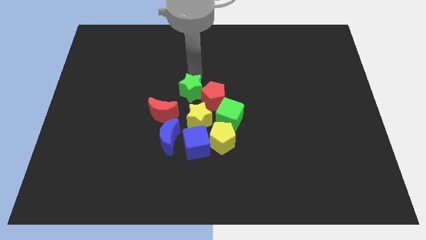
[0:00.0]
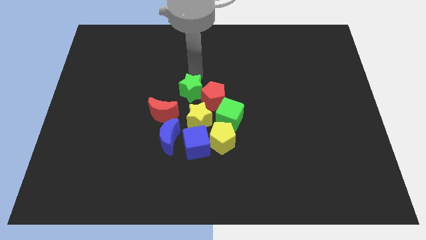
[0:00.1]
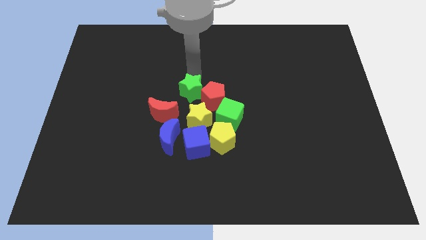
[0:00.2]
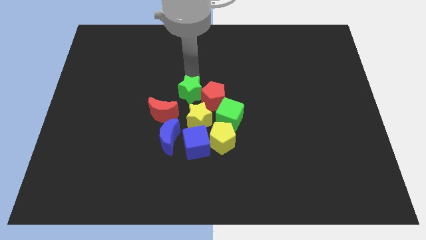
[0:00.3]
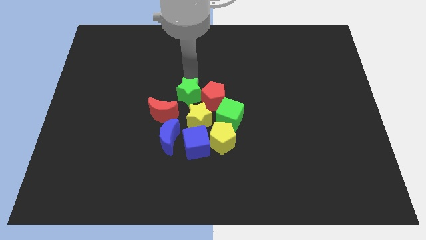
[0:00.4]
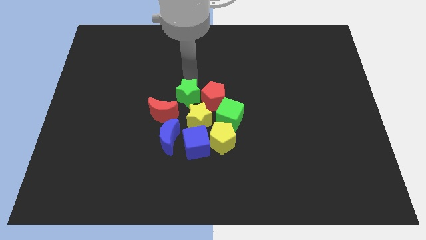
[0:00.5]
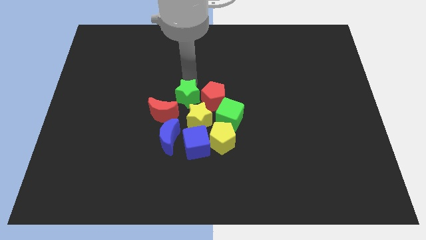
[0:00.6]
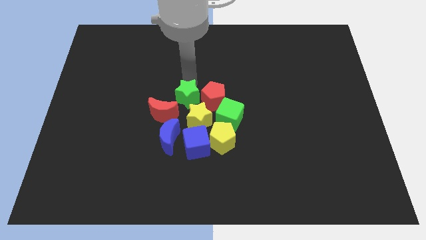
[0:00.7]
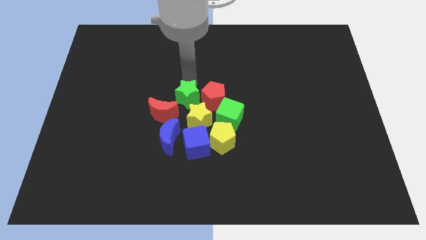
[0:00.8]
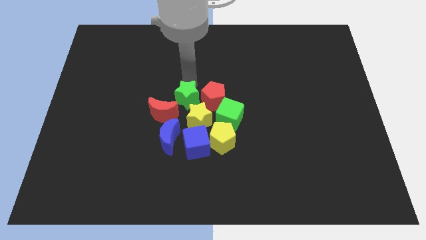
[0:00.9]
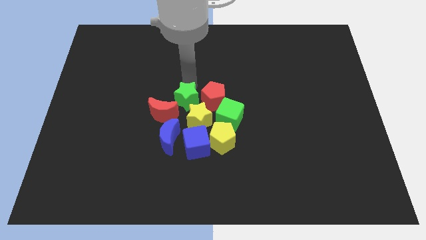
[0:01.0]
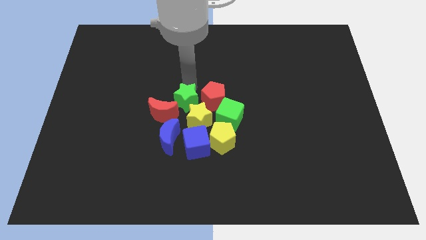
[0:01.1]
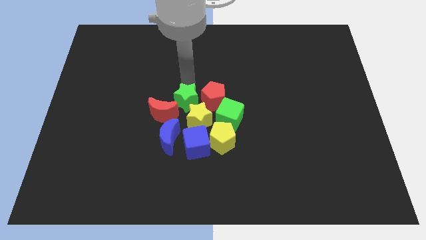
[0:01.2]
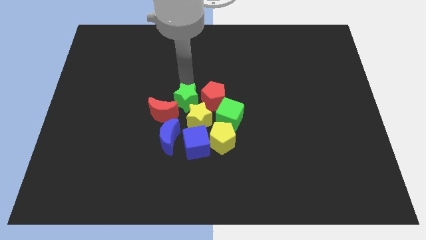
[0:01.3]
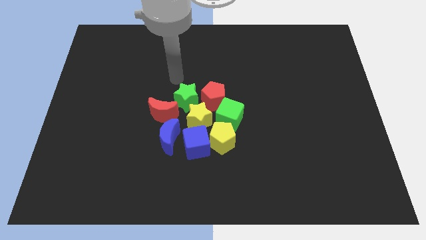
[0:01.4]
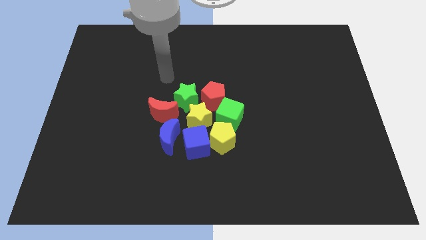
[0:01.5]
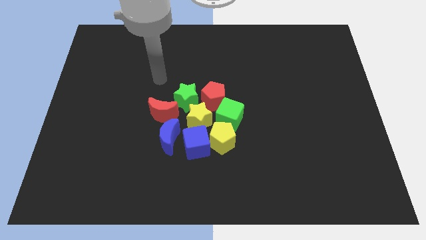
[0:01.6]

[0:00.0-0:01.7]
place the green star beside red pentagon

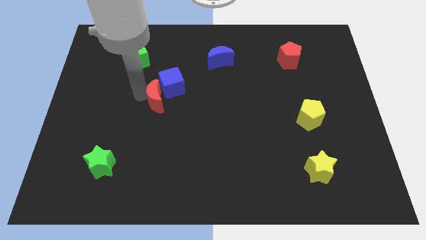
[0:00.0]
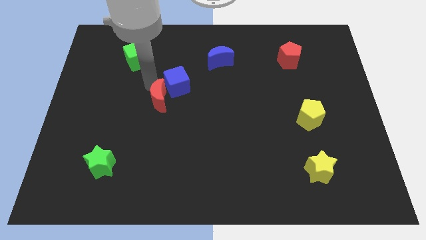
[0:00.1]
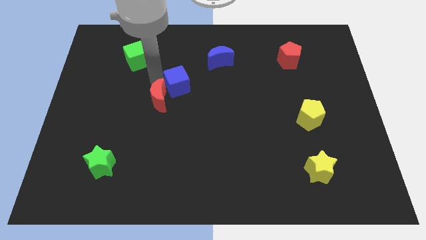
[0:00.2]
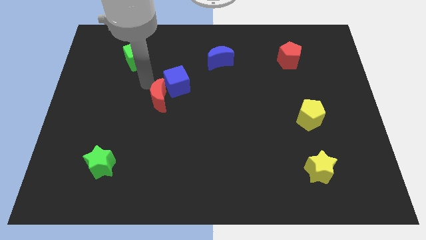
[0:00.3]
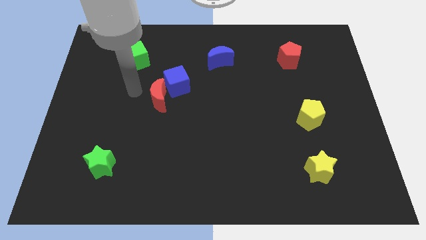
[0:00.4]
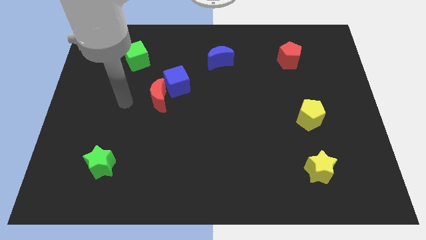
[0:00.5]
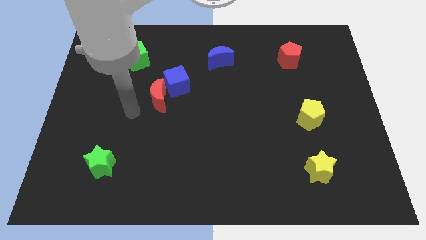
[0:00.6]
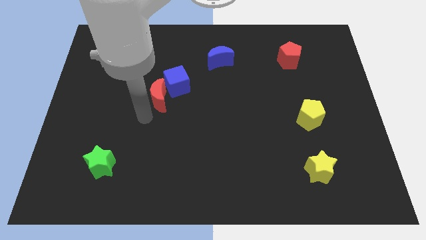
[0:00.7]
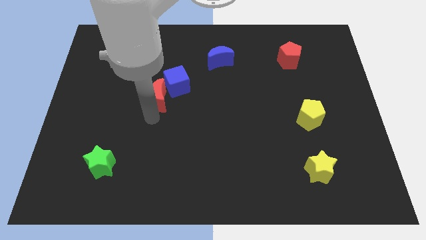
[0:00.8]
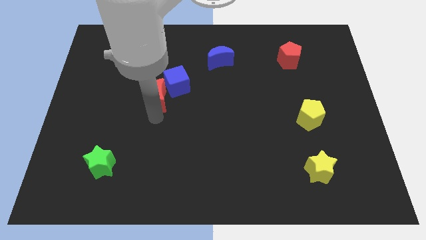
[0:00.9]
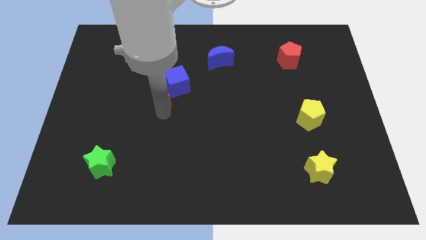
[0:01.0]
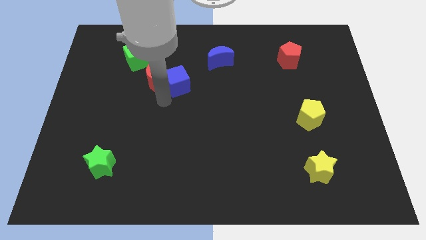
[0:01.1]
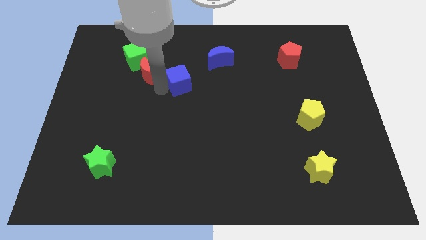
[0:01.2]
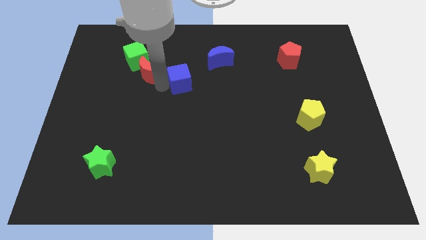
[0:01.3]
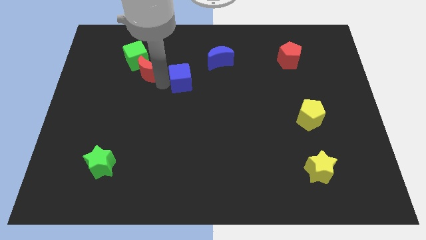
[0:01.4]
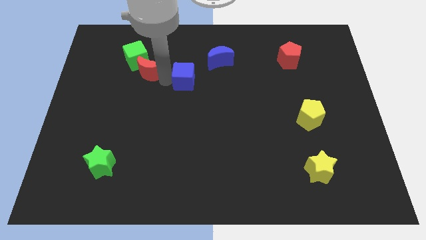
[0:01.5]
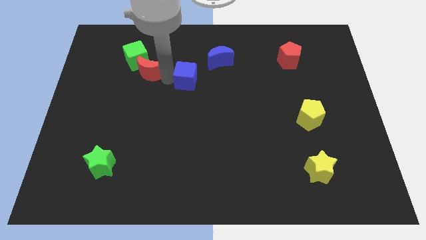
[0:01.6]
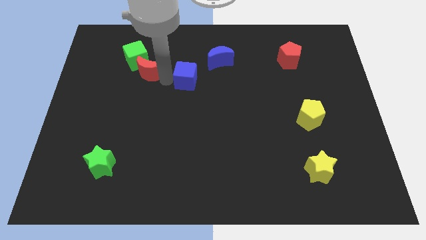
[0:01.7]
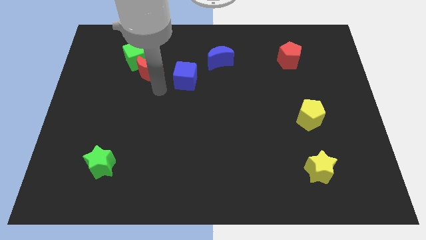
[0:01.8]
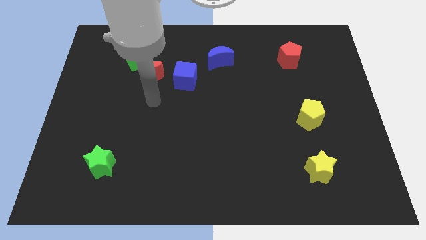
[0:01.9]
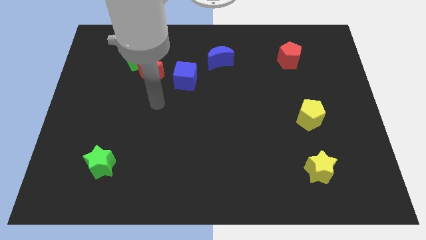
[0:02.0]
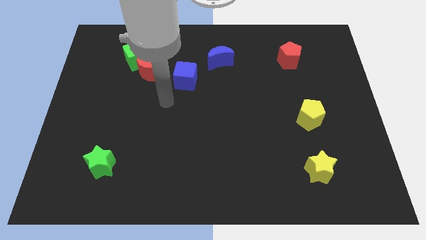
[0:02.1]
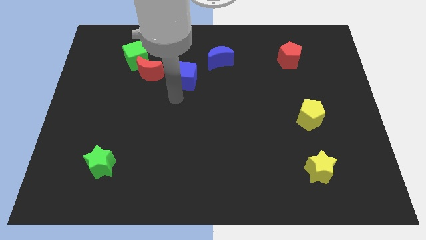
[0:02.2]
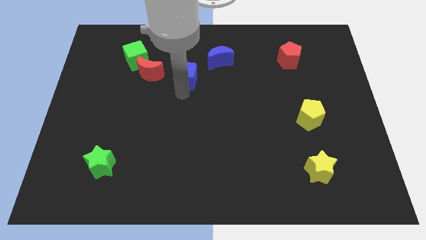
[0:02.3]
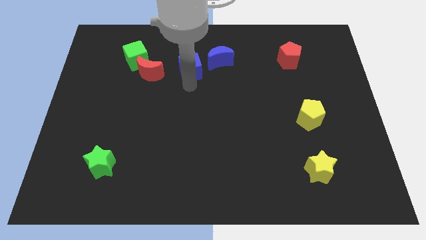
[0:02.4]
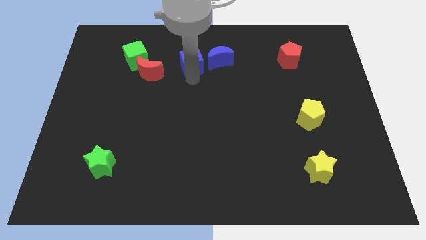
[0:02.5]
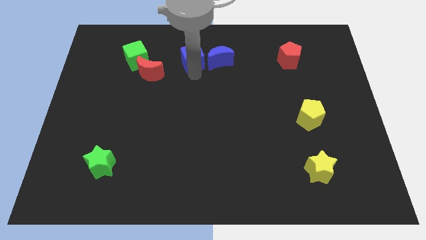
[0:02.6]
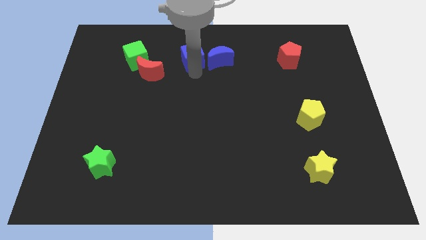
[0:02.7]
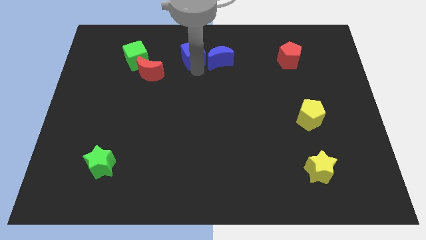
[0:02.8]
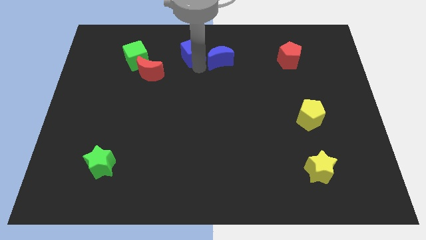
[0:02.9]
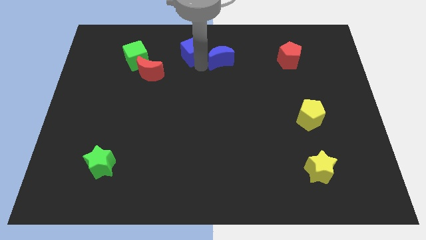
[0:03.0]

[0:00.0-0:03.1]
push the blue cube close to the left side of the blue moon

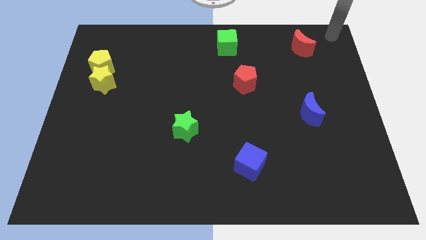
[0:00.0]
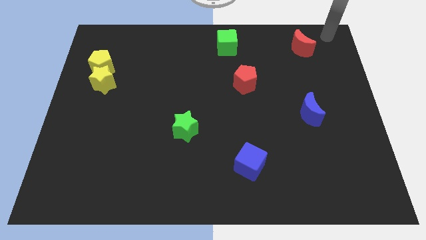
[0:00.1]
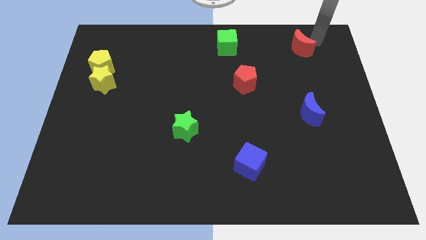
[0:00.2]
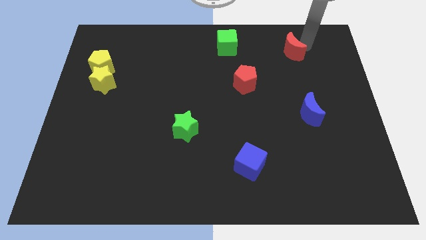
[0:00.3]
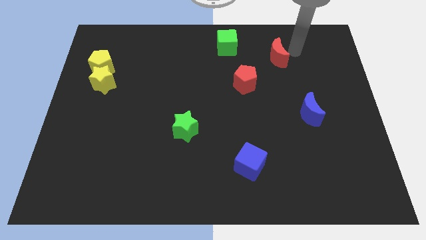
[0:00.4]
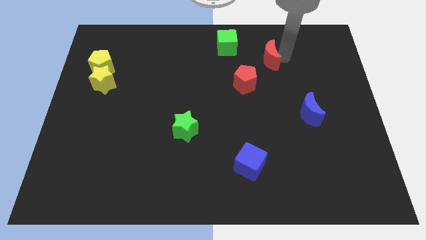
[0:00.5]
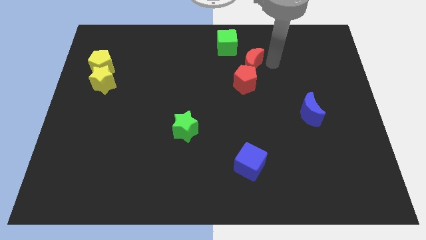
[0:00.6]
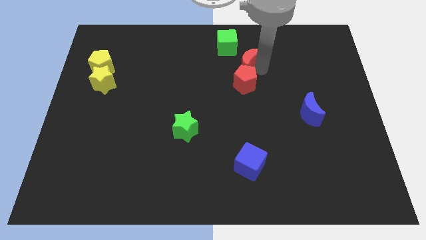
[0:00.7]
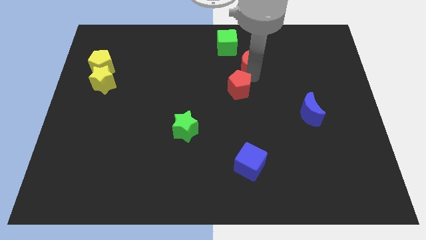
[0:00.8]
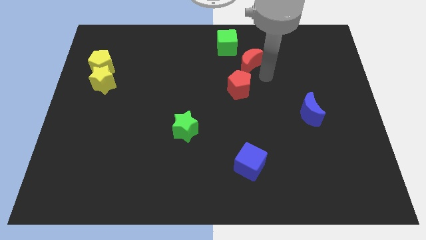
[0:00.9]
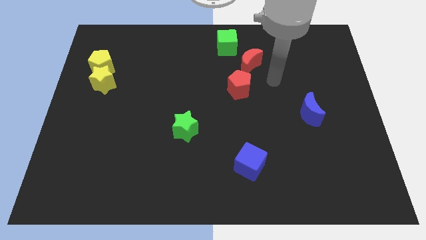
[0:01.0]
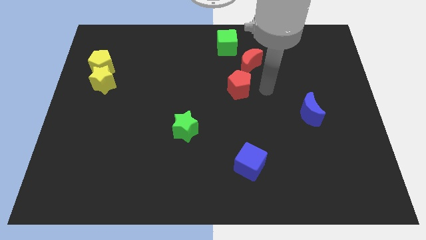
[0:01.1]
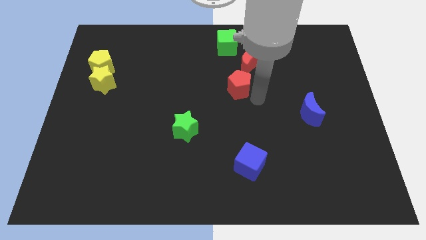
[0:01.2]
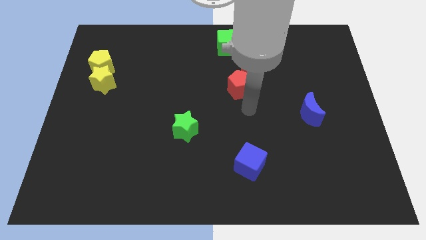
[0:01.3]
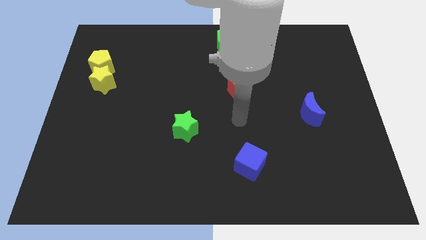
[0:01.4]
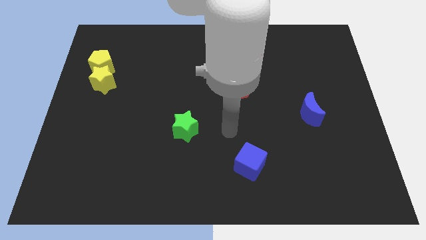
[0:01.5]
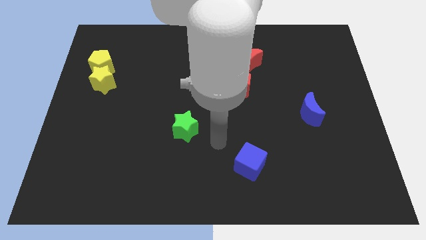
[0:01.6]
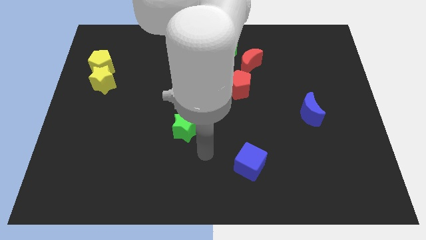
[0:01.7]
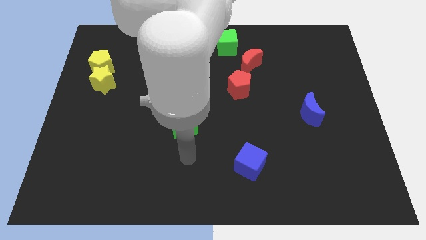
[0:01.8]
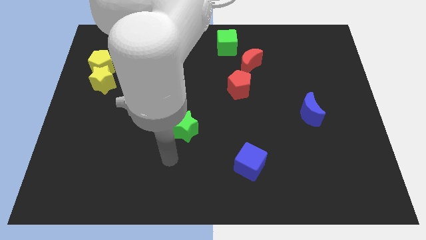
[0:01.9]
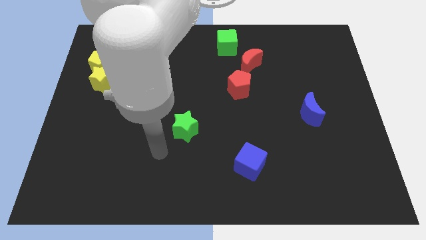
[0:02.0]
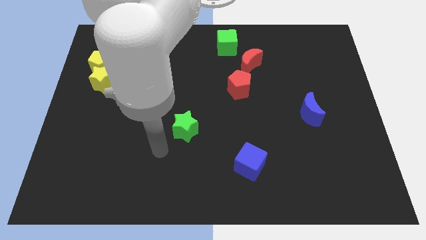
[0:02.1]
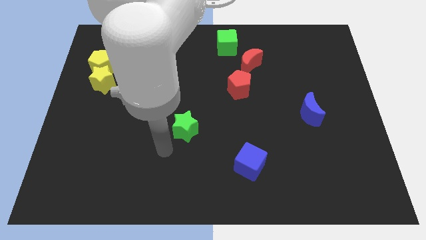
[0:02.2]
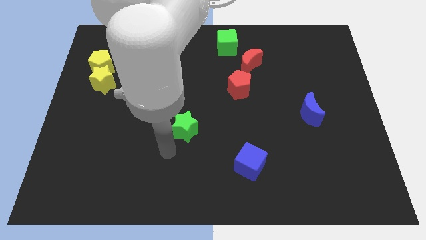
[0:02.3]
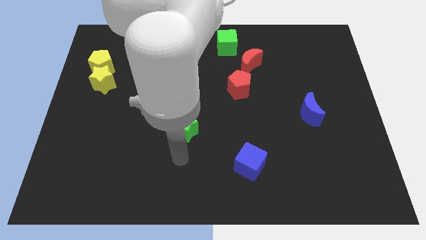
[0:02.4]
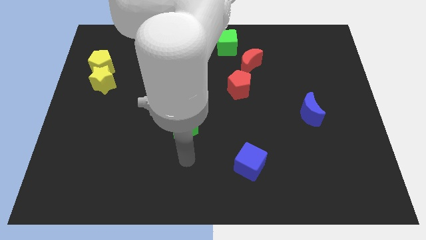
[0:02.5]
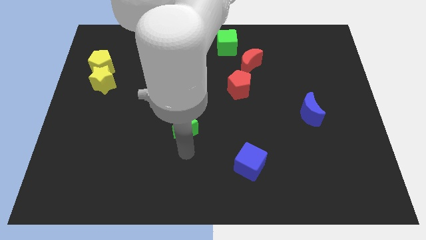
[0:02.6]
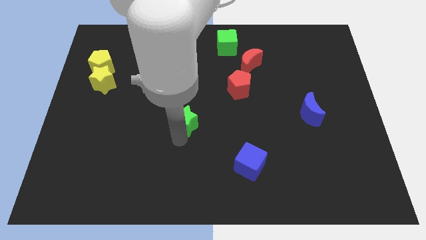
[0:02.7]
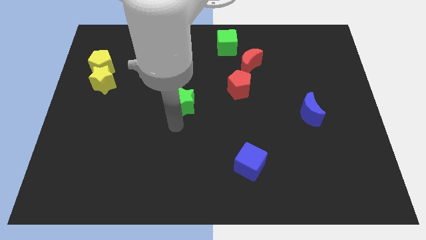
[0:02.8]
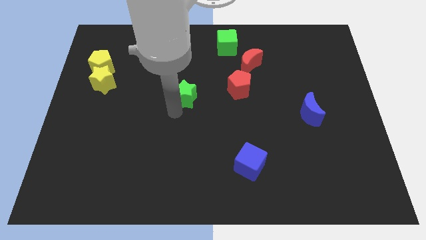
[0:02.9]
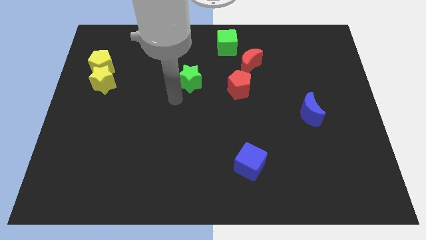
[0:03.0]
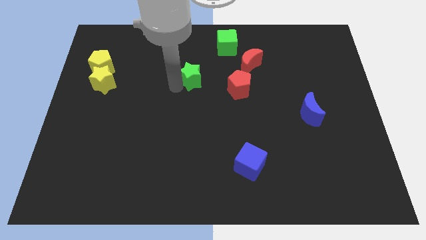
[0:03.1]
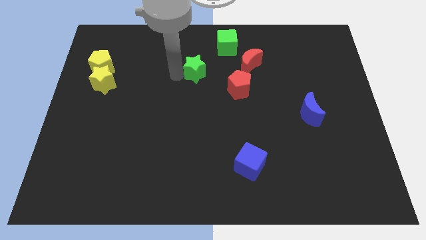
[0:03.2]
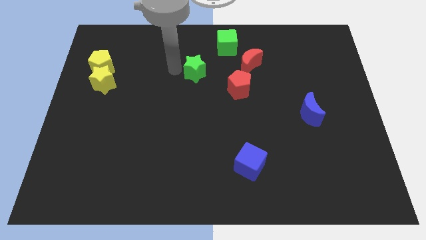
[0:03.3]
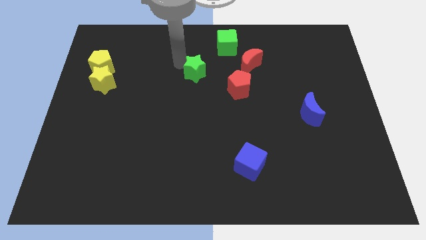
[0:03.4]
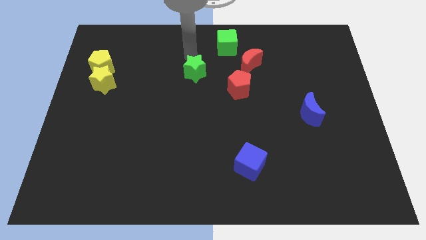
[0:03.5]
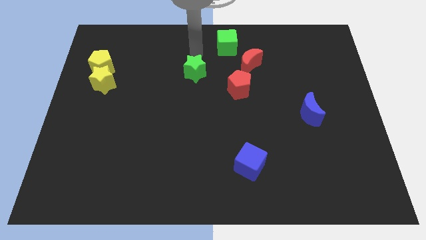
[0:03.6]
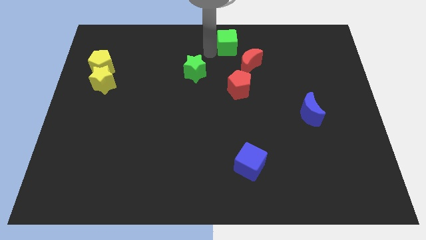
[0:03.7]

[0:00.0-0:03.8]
push the green star diagonal top left to the red pentagon

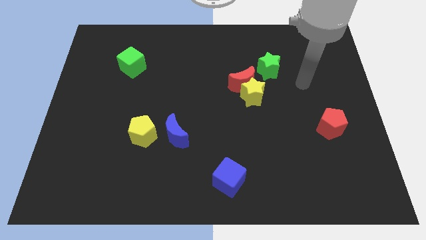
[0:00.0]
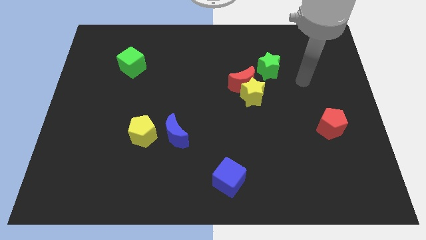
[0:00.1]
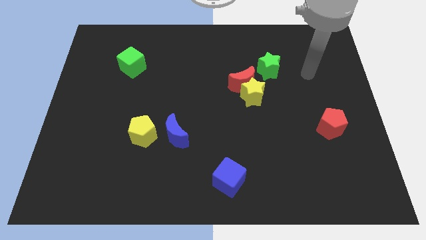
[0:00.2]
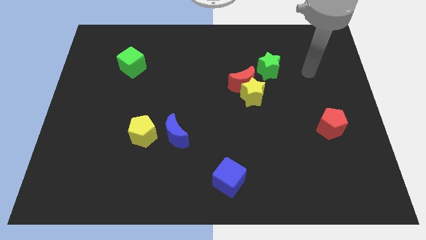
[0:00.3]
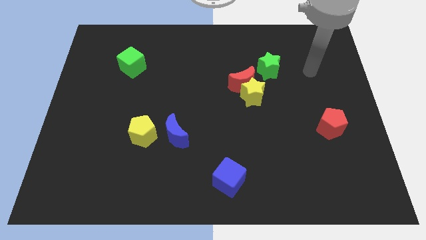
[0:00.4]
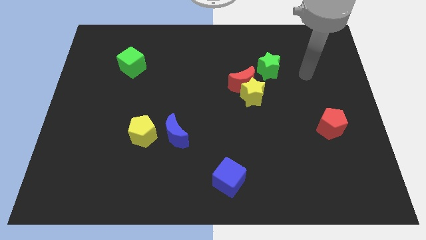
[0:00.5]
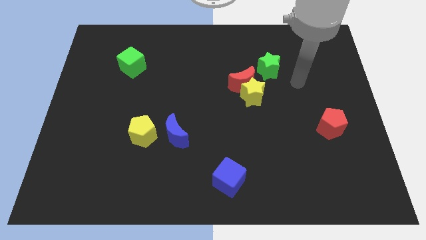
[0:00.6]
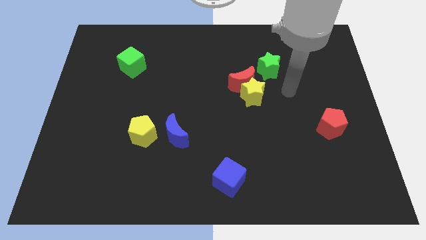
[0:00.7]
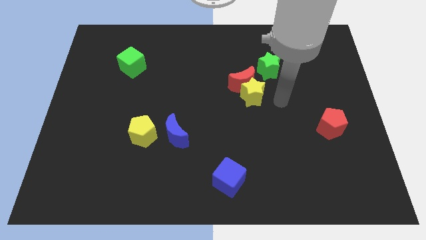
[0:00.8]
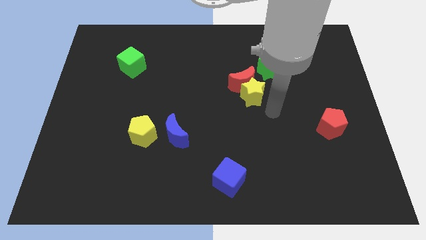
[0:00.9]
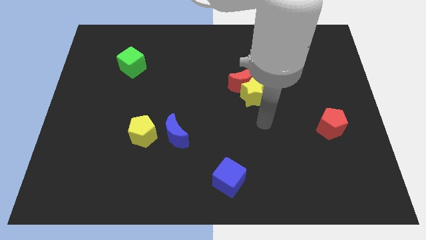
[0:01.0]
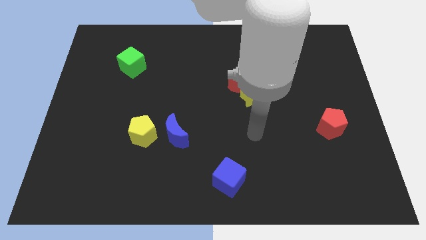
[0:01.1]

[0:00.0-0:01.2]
point your hand below the yellow star
